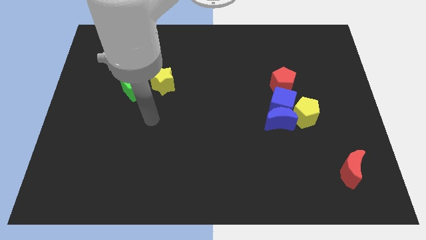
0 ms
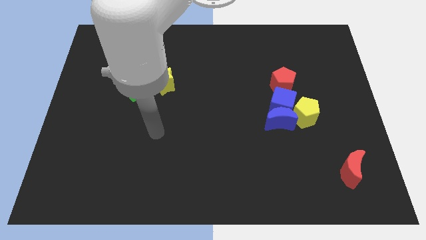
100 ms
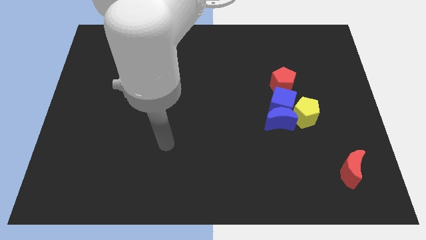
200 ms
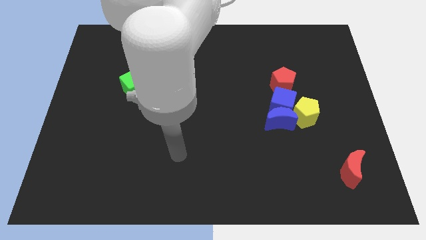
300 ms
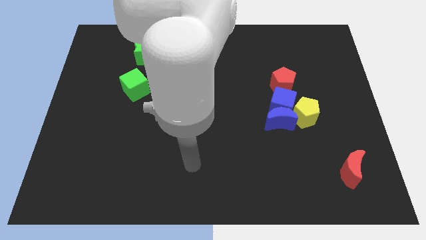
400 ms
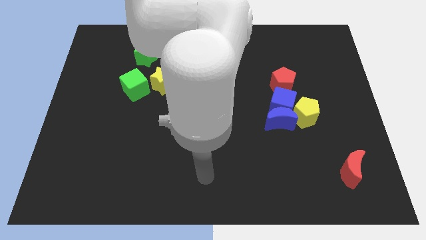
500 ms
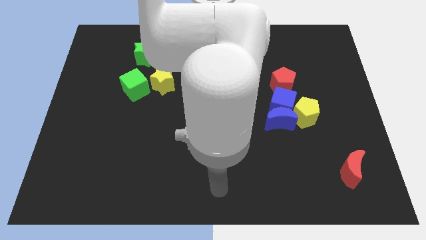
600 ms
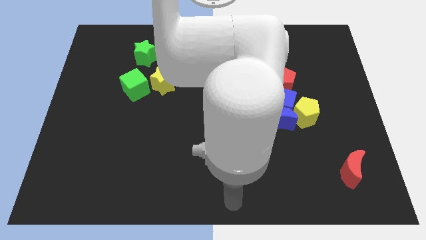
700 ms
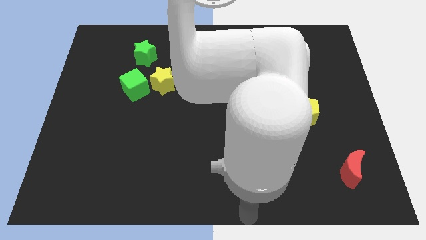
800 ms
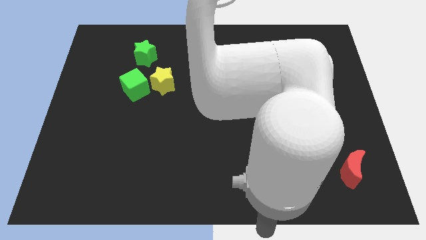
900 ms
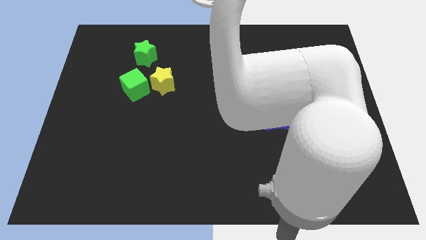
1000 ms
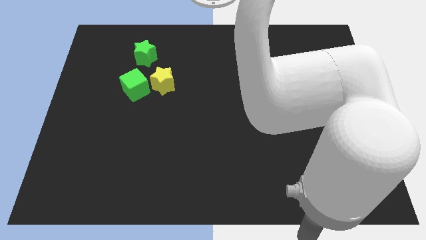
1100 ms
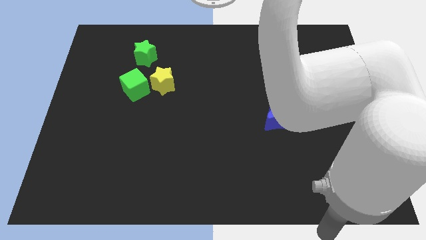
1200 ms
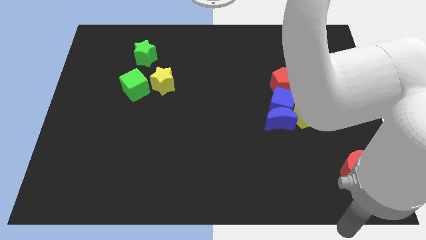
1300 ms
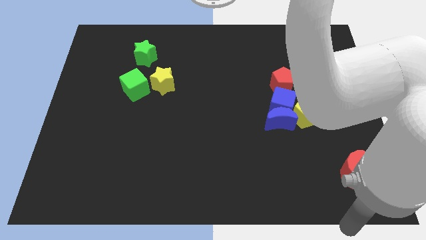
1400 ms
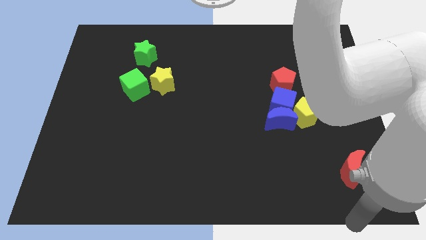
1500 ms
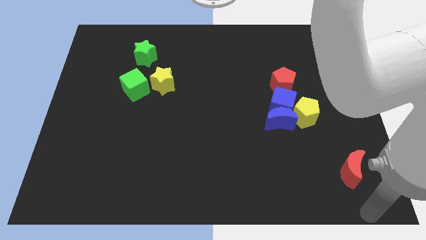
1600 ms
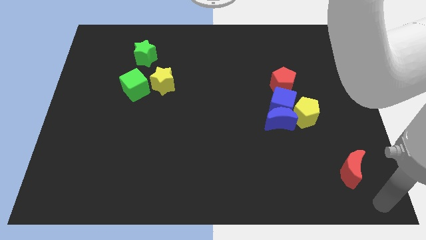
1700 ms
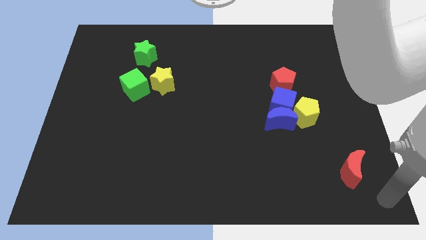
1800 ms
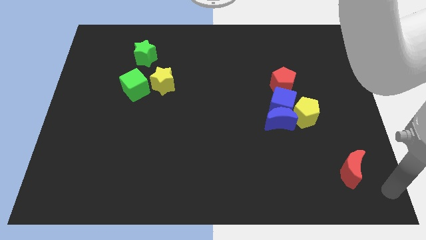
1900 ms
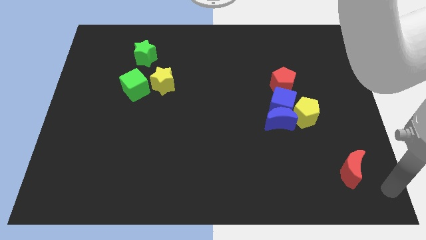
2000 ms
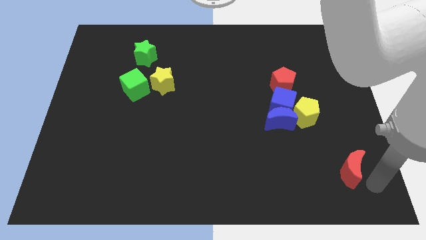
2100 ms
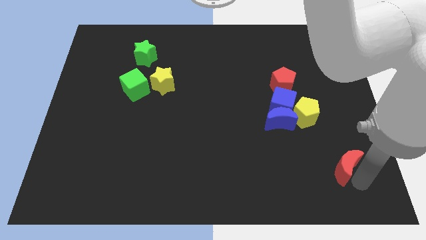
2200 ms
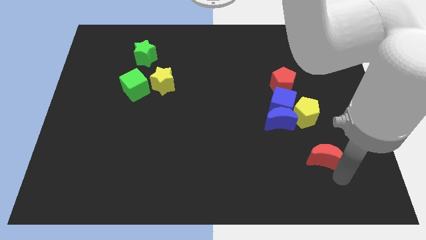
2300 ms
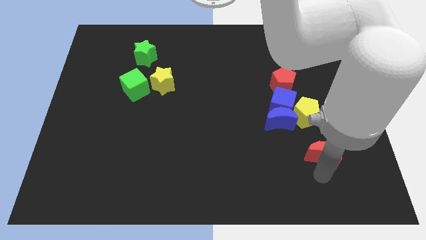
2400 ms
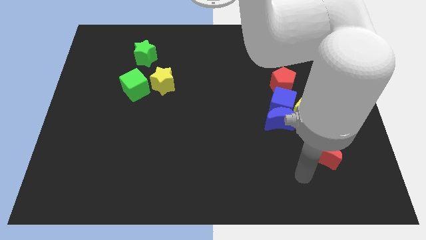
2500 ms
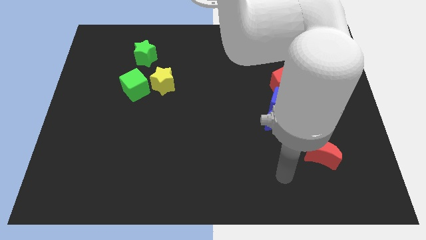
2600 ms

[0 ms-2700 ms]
move your arm to left of the red crescent

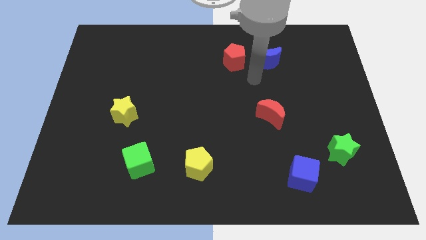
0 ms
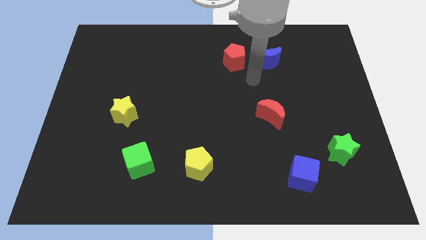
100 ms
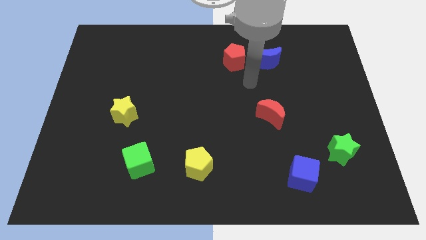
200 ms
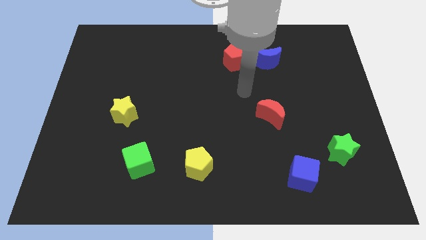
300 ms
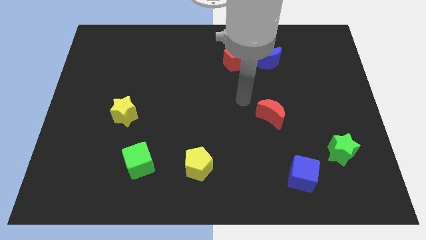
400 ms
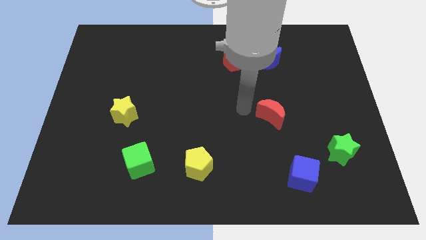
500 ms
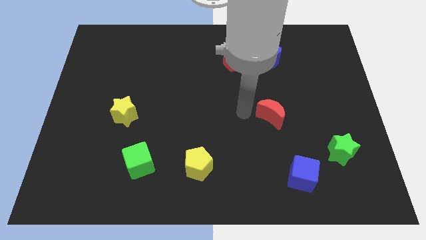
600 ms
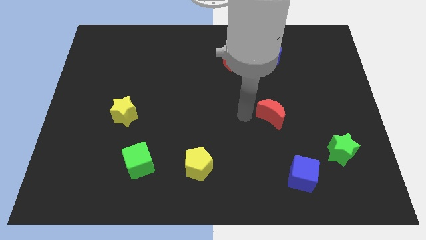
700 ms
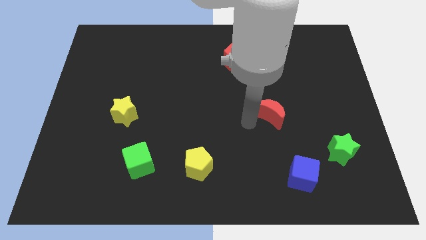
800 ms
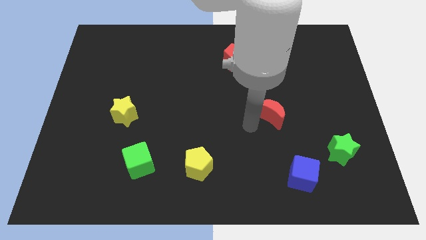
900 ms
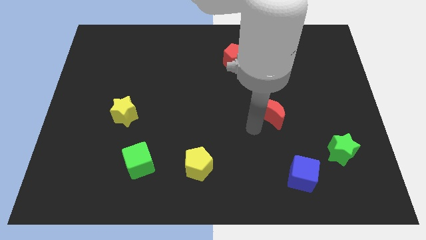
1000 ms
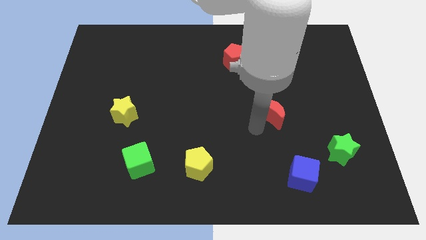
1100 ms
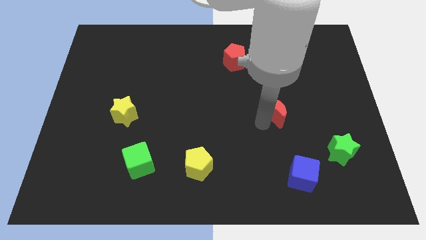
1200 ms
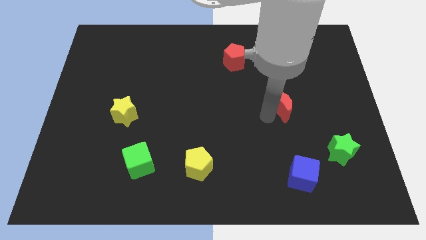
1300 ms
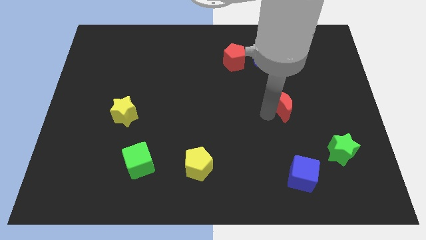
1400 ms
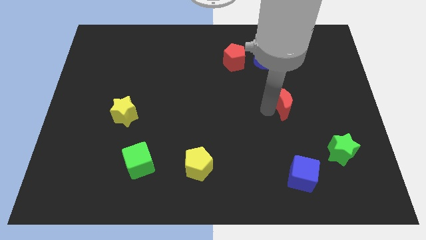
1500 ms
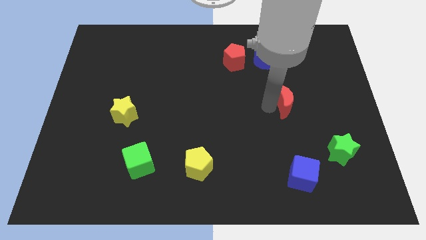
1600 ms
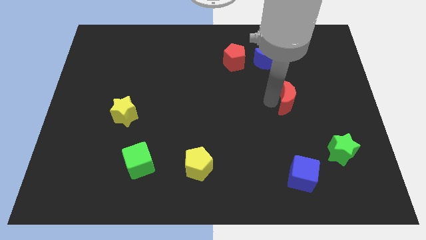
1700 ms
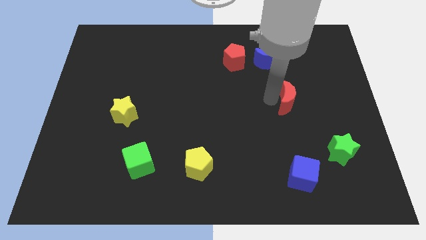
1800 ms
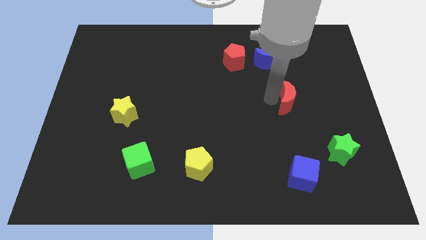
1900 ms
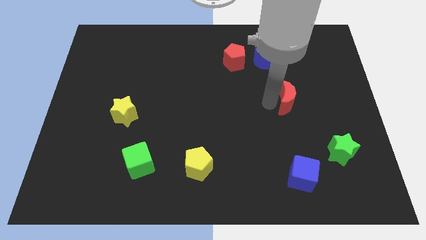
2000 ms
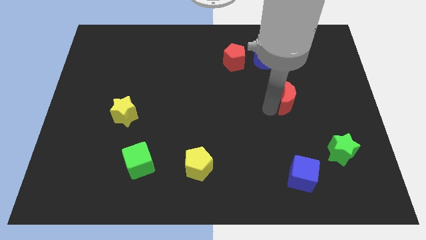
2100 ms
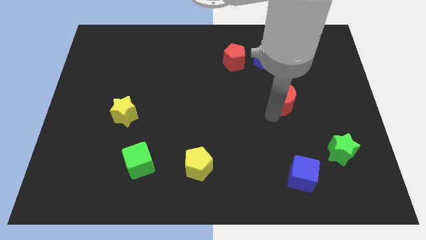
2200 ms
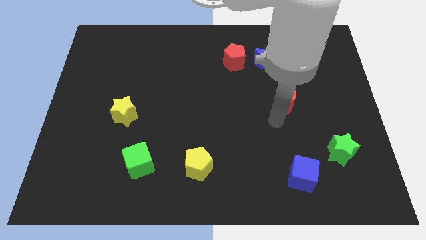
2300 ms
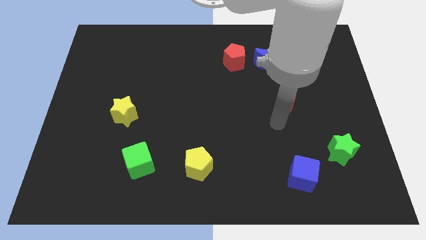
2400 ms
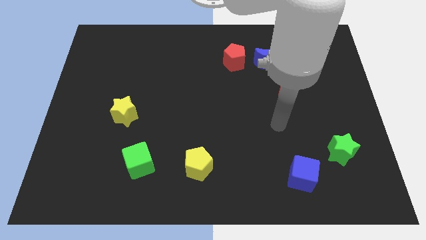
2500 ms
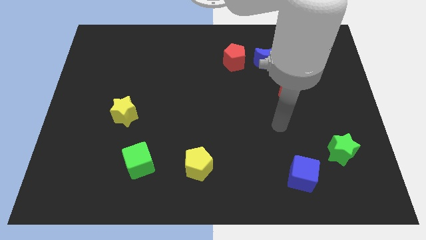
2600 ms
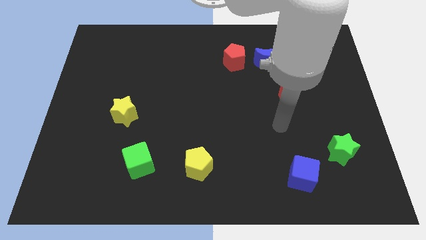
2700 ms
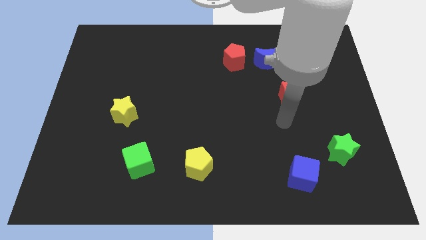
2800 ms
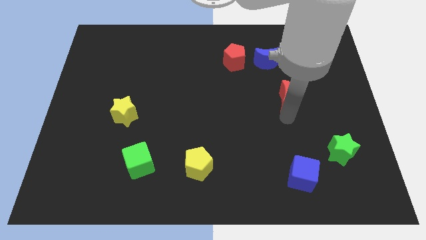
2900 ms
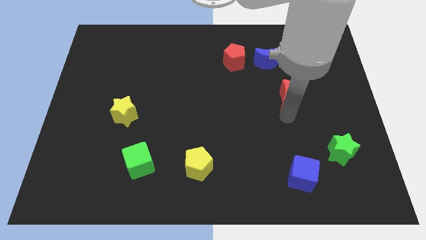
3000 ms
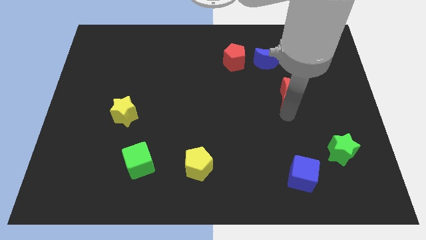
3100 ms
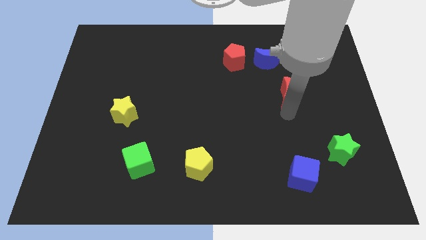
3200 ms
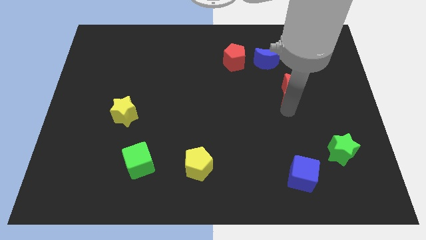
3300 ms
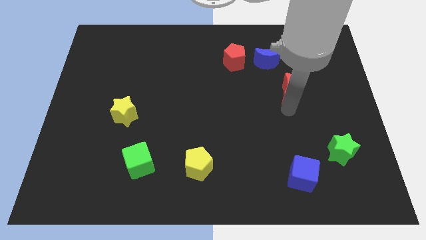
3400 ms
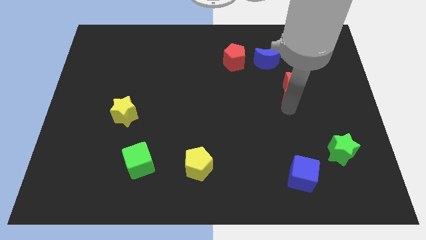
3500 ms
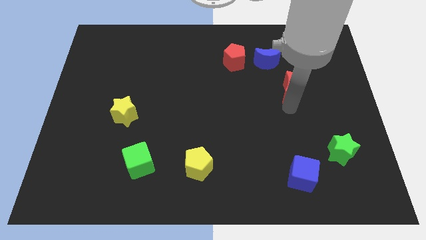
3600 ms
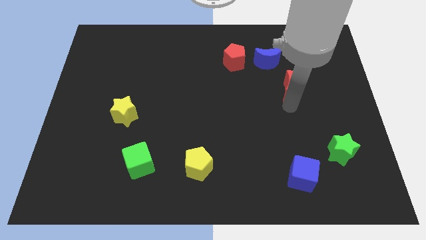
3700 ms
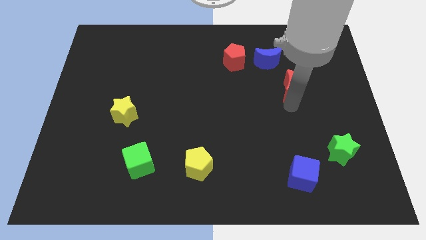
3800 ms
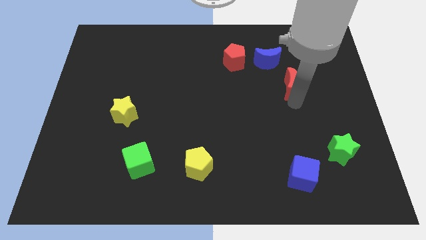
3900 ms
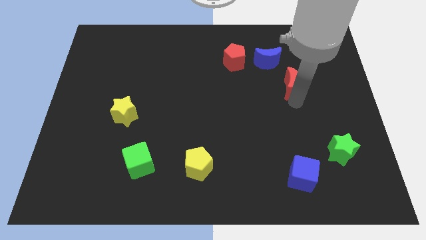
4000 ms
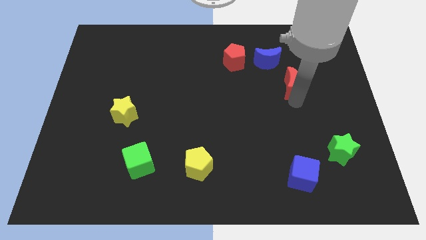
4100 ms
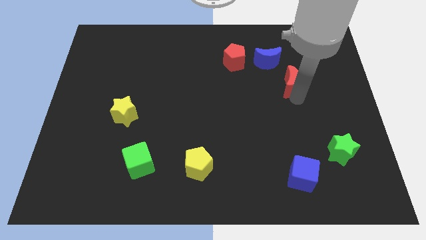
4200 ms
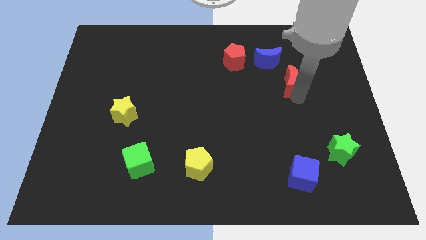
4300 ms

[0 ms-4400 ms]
place the red crescent towards the bottom right side of the blue crescent

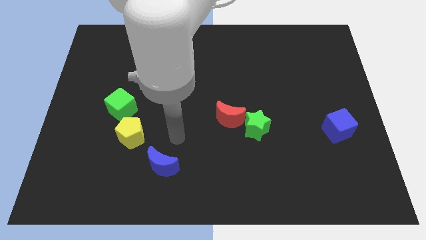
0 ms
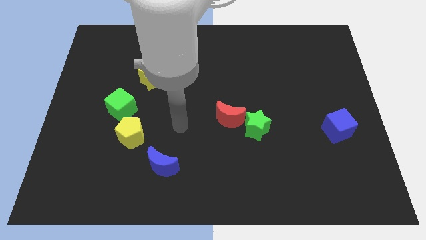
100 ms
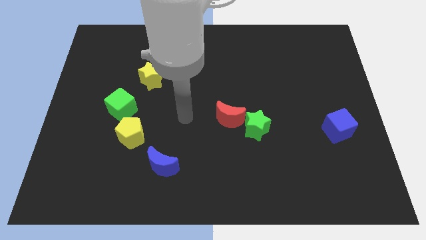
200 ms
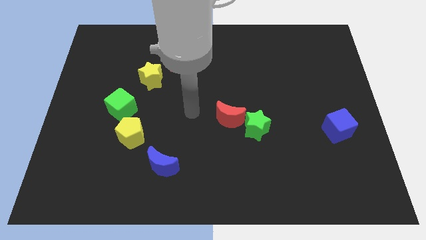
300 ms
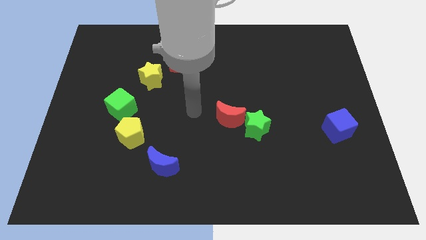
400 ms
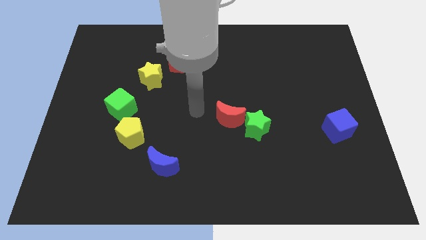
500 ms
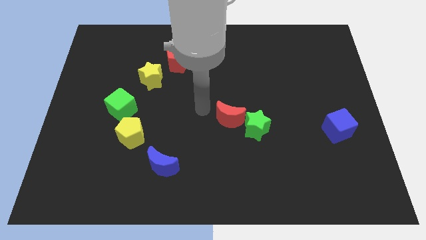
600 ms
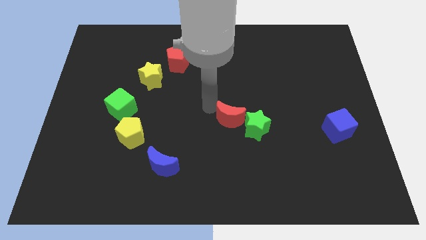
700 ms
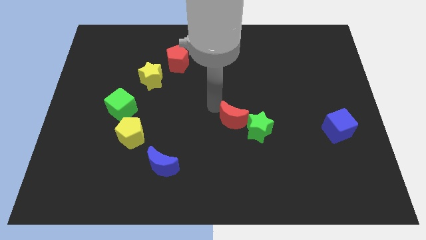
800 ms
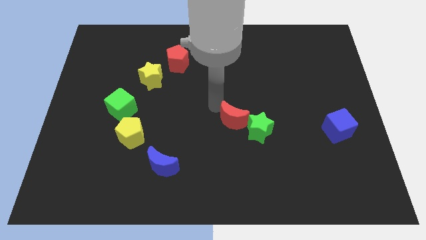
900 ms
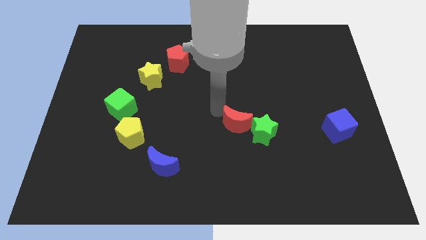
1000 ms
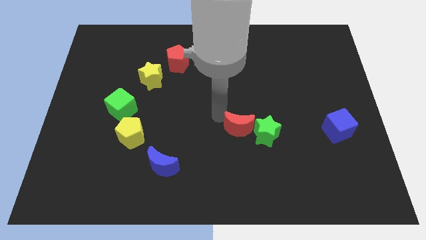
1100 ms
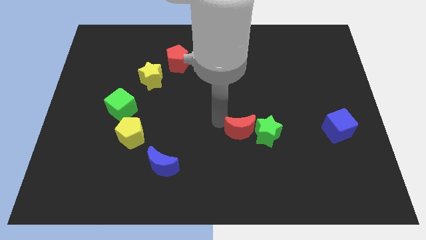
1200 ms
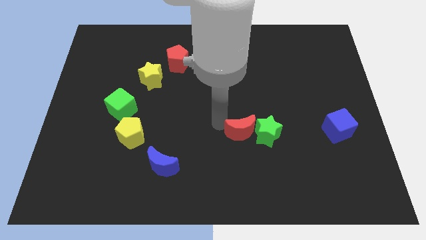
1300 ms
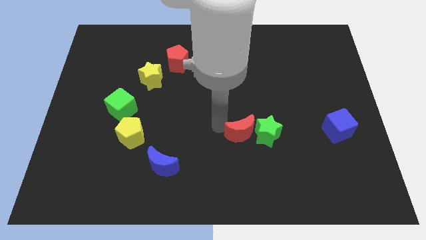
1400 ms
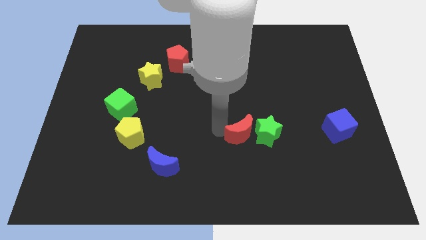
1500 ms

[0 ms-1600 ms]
move the red crescent to the left of the green star

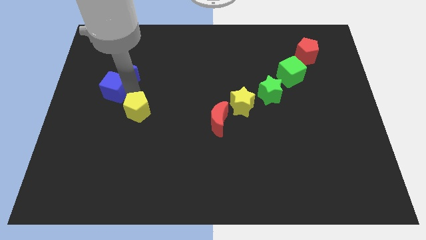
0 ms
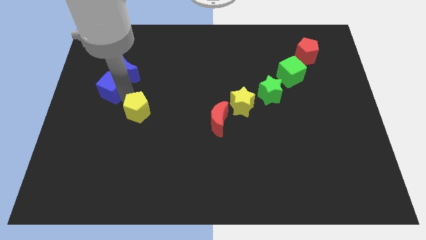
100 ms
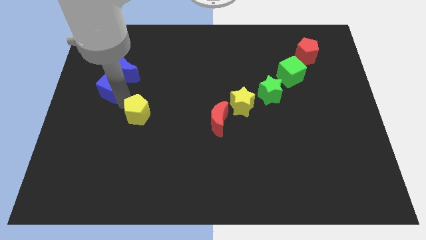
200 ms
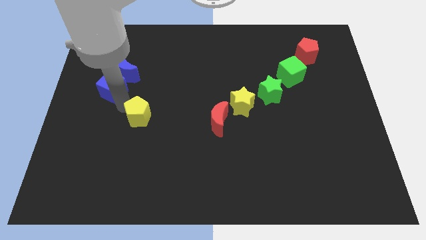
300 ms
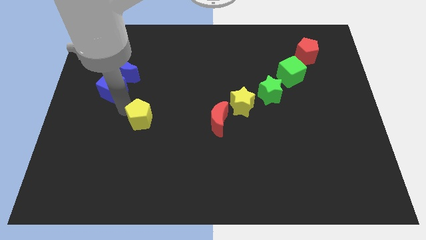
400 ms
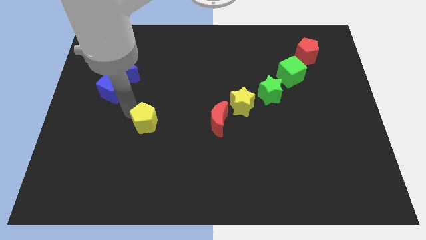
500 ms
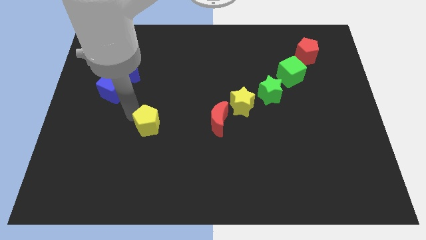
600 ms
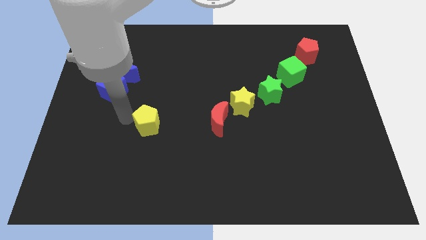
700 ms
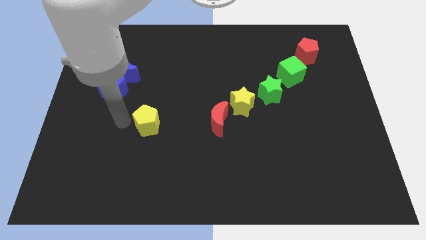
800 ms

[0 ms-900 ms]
push the yellow pentagon downward
